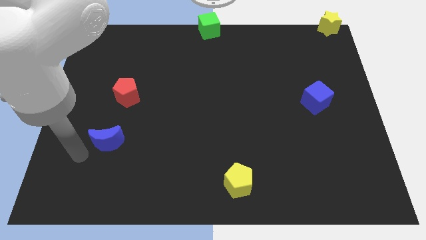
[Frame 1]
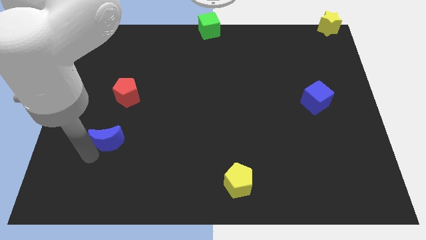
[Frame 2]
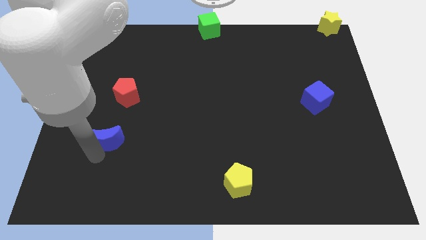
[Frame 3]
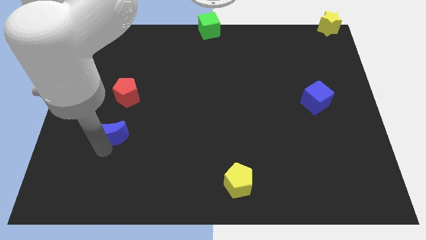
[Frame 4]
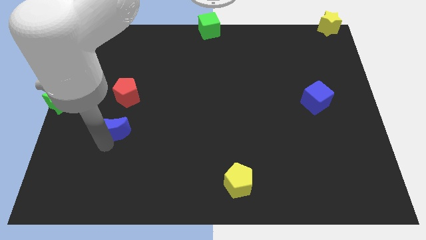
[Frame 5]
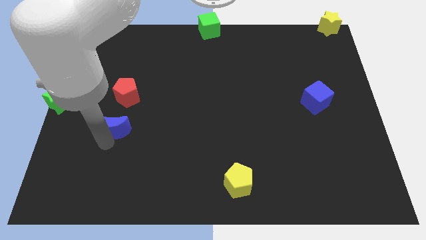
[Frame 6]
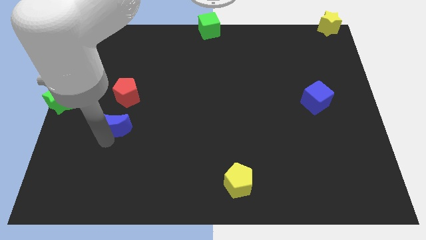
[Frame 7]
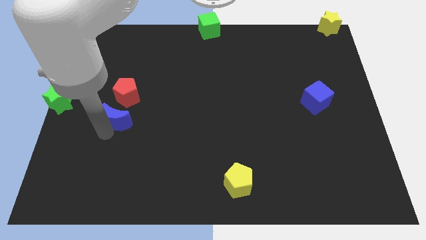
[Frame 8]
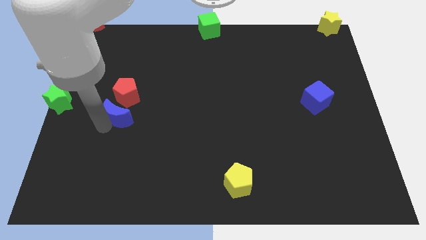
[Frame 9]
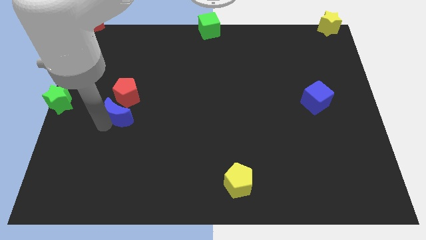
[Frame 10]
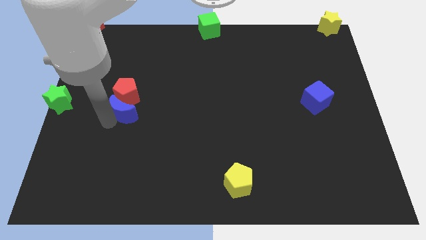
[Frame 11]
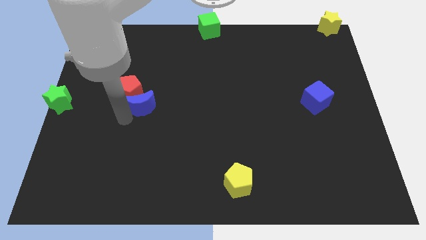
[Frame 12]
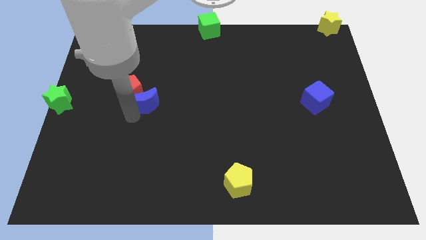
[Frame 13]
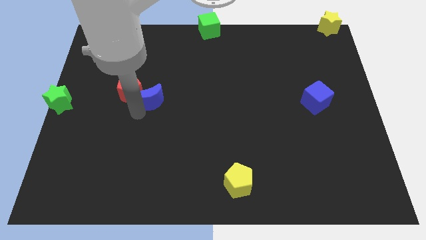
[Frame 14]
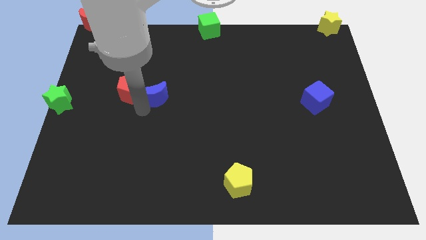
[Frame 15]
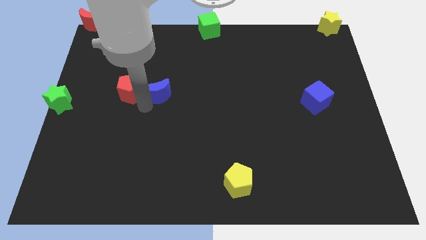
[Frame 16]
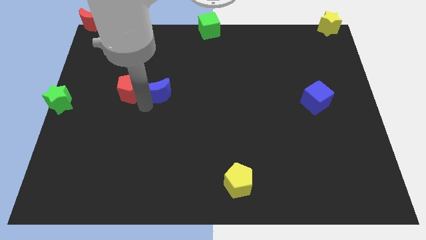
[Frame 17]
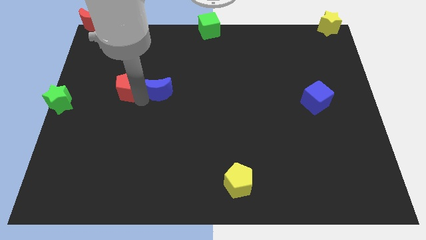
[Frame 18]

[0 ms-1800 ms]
move the blue crescent right to the red pentagon

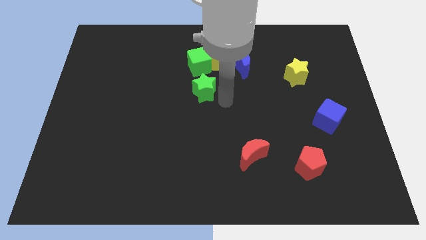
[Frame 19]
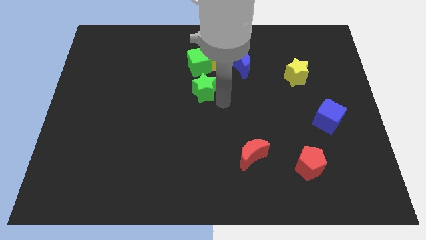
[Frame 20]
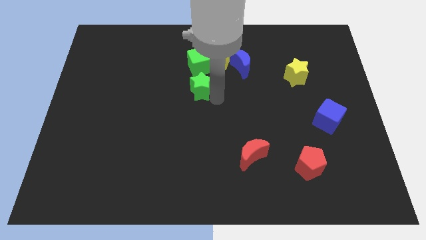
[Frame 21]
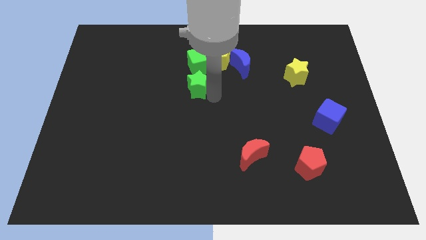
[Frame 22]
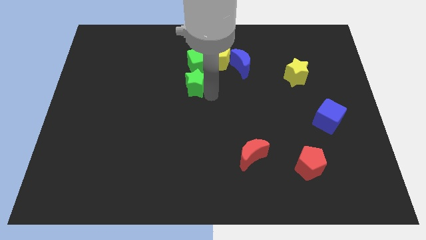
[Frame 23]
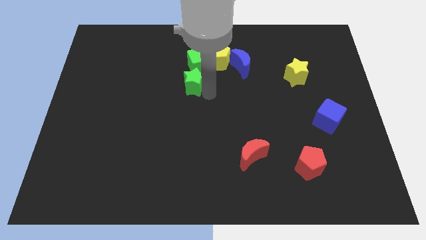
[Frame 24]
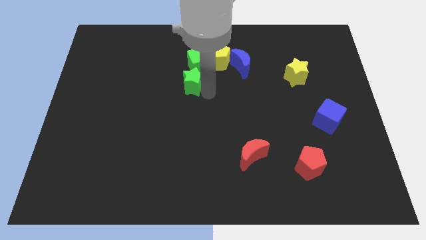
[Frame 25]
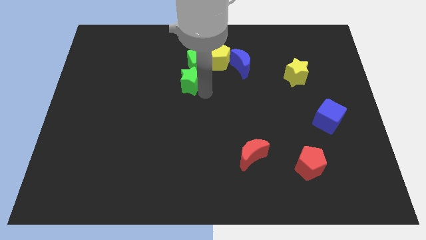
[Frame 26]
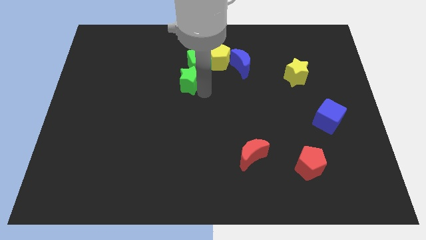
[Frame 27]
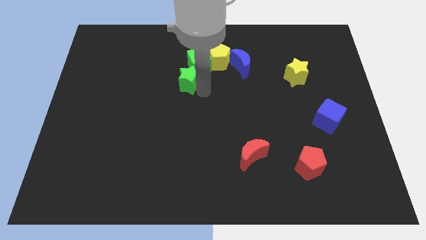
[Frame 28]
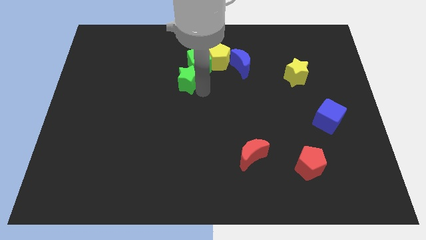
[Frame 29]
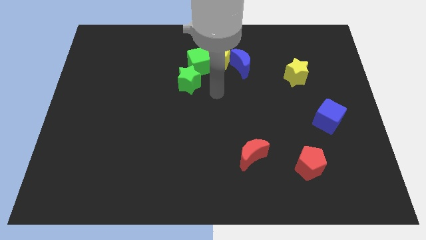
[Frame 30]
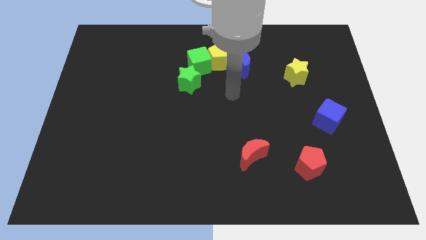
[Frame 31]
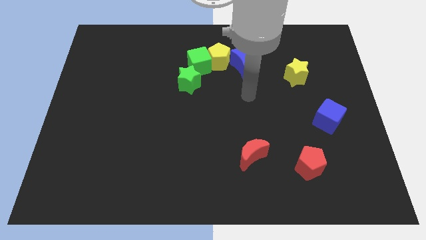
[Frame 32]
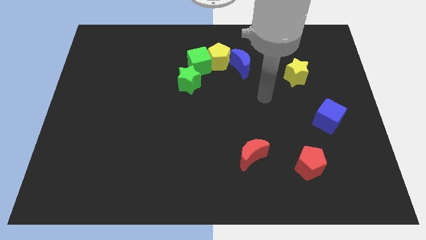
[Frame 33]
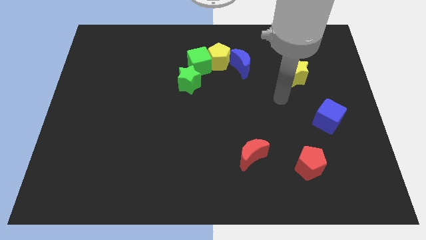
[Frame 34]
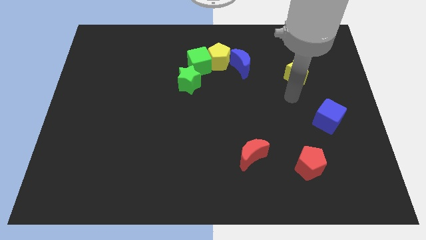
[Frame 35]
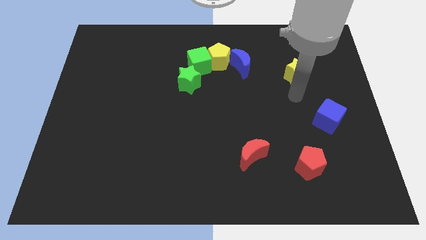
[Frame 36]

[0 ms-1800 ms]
push the green star to the bottom left of the green cube

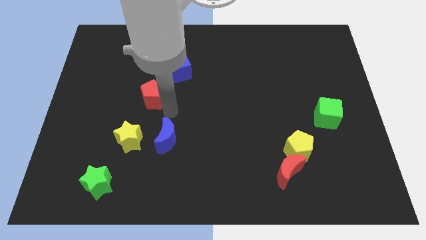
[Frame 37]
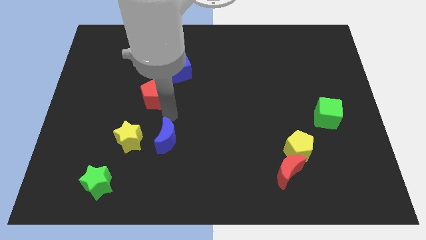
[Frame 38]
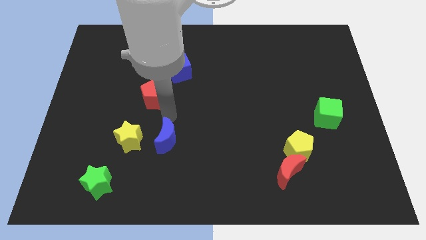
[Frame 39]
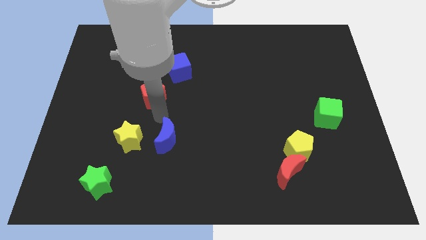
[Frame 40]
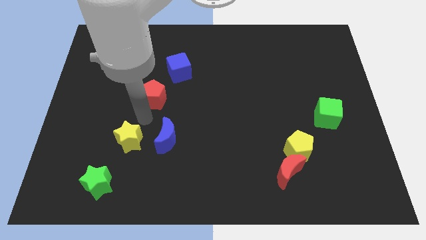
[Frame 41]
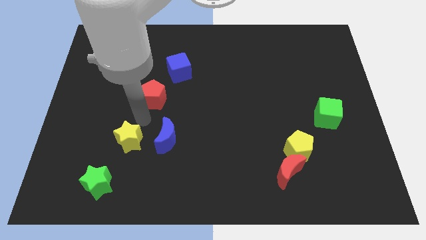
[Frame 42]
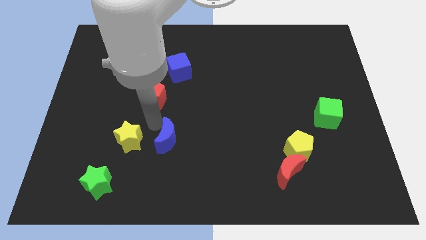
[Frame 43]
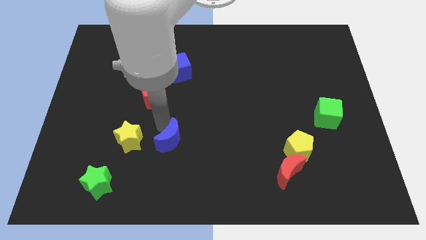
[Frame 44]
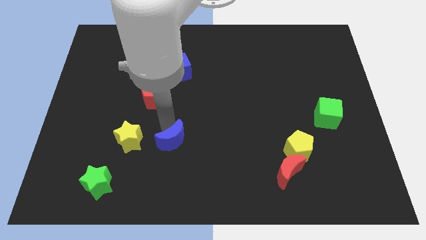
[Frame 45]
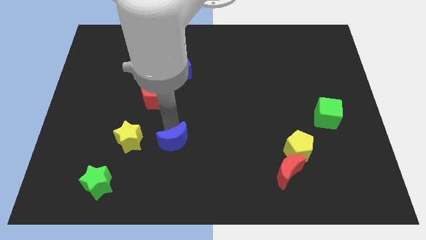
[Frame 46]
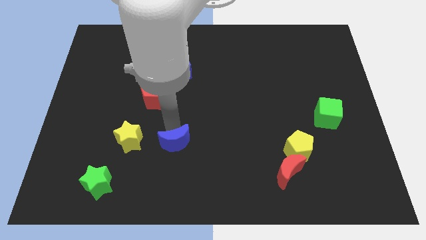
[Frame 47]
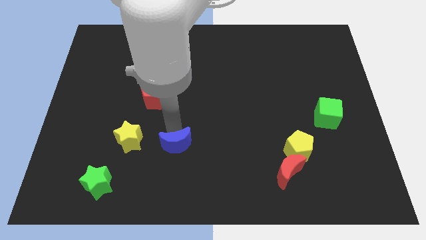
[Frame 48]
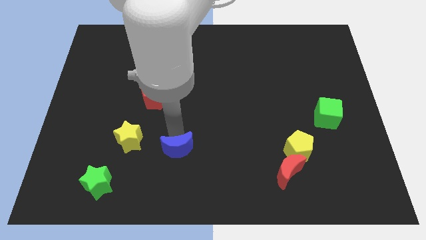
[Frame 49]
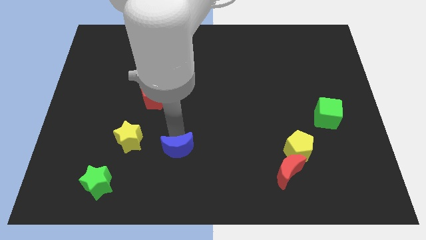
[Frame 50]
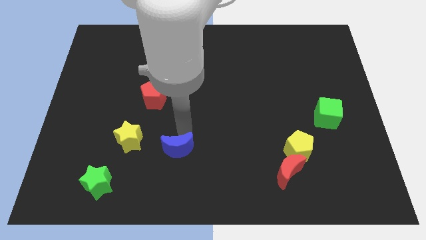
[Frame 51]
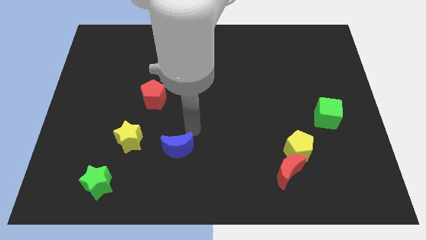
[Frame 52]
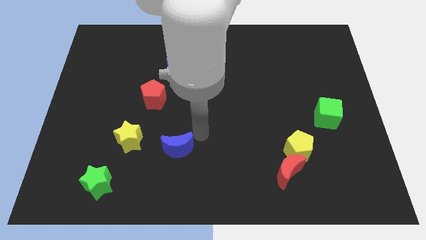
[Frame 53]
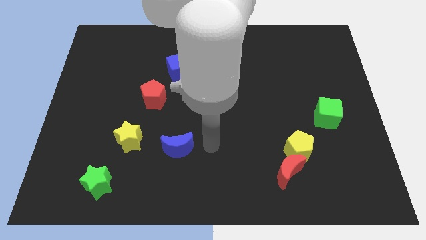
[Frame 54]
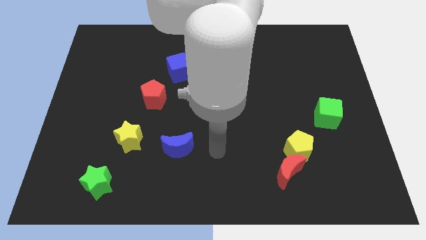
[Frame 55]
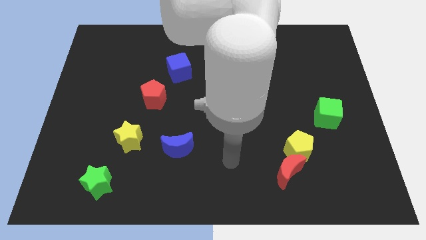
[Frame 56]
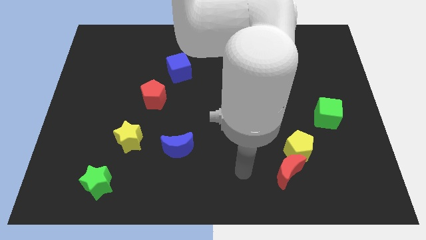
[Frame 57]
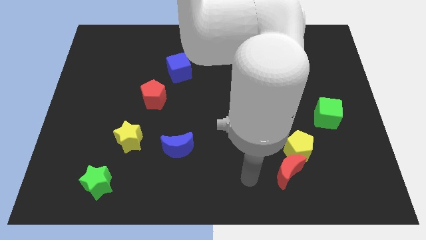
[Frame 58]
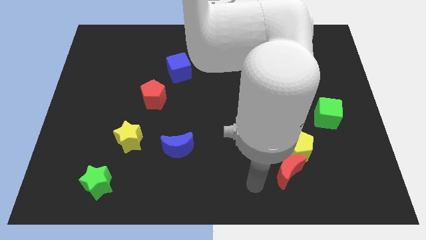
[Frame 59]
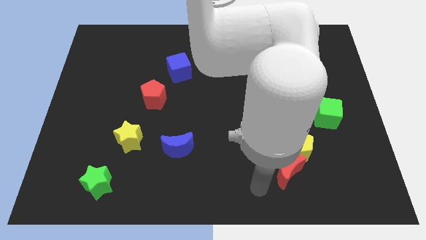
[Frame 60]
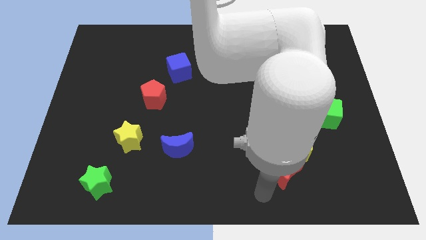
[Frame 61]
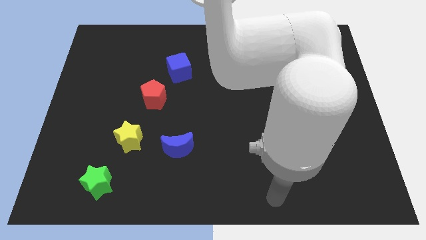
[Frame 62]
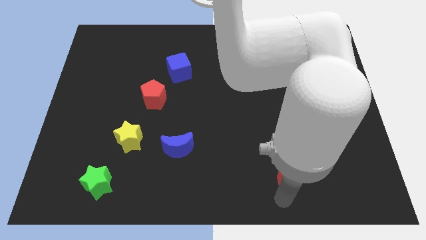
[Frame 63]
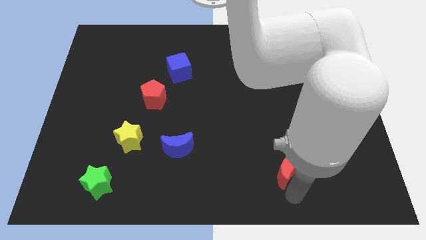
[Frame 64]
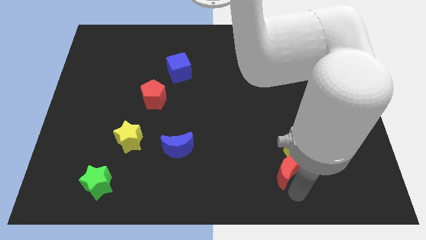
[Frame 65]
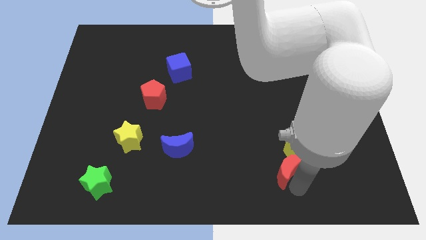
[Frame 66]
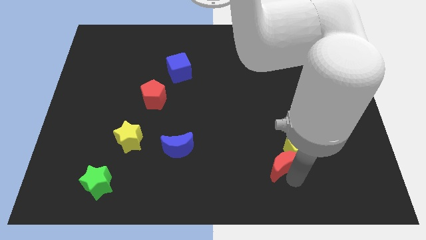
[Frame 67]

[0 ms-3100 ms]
adjust the blue moon slightly to the right of the yellow star

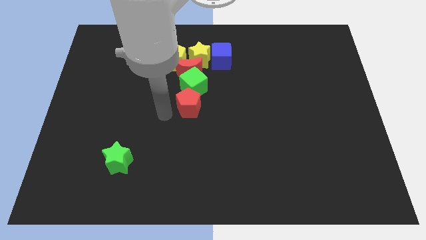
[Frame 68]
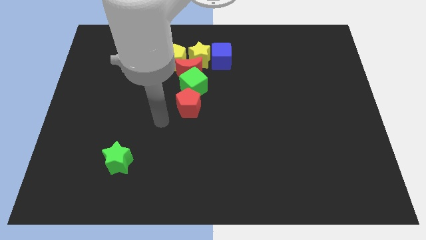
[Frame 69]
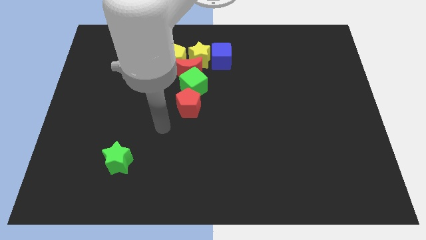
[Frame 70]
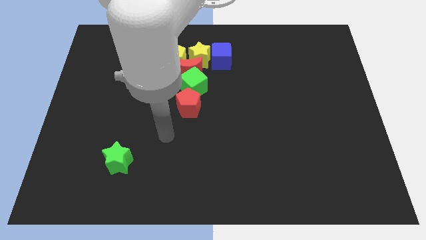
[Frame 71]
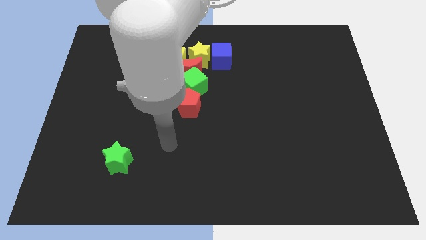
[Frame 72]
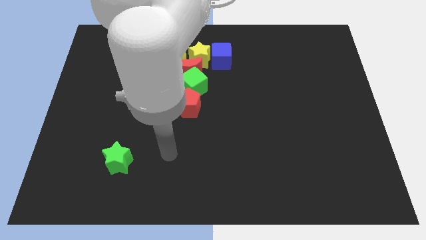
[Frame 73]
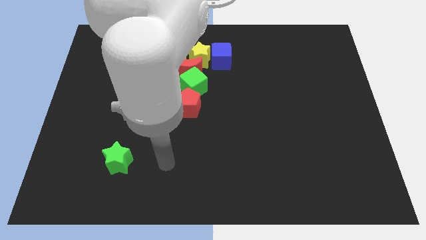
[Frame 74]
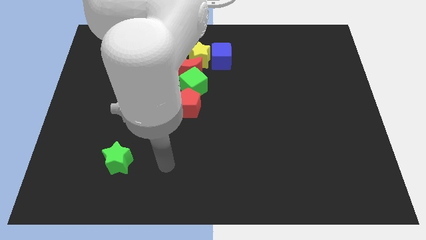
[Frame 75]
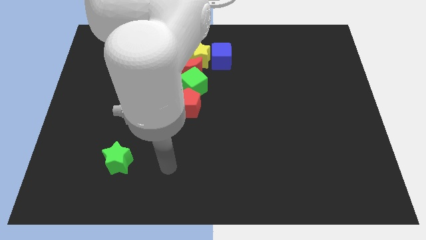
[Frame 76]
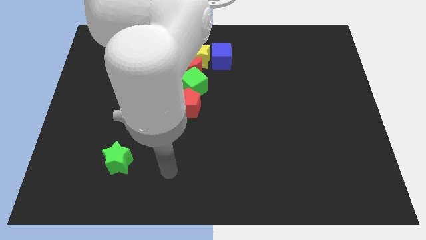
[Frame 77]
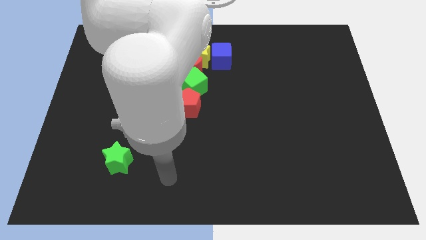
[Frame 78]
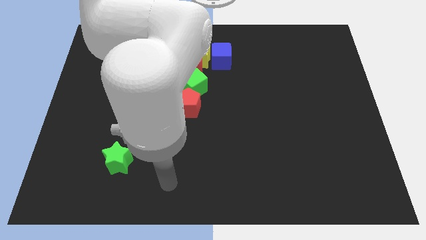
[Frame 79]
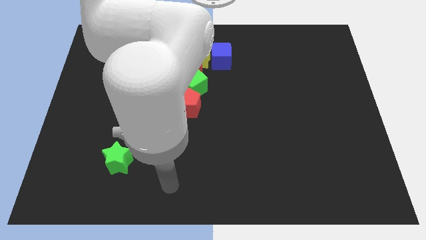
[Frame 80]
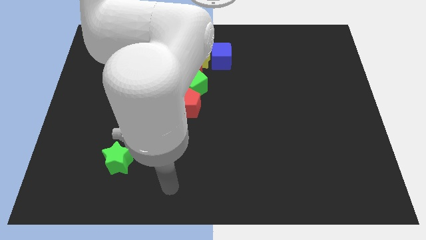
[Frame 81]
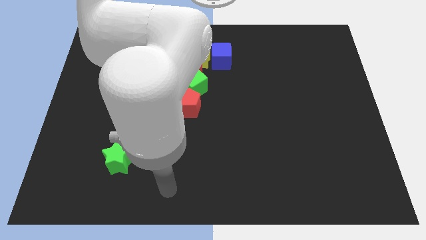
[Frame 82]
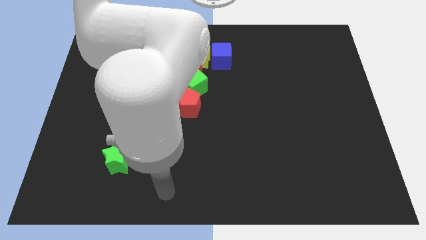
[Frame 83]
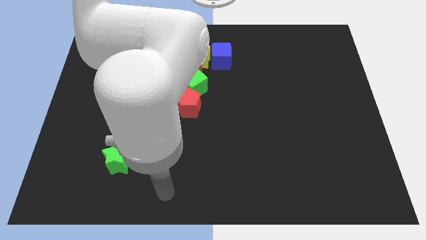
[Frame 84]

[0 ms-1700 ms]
move your arm away from the red pentagon

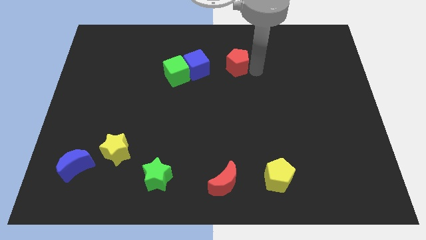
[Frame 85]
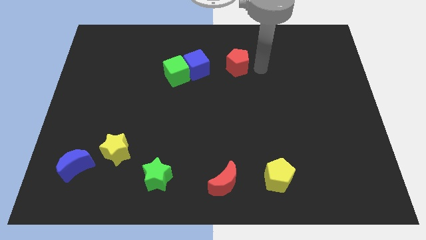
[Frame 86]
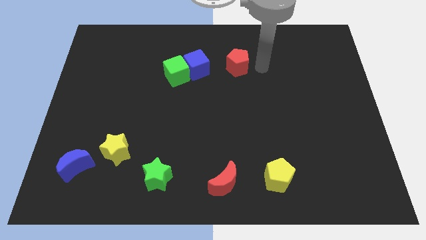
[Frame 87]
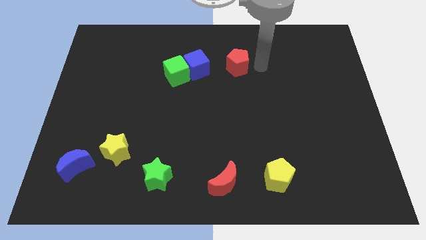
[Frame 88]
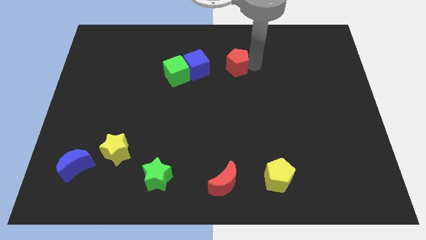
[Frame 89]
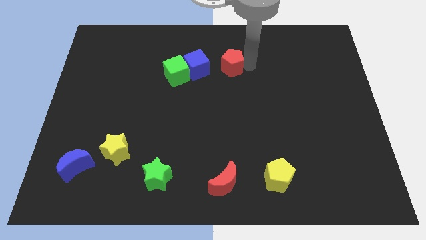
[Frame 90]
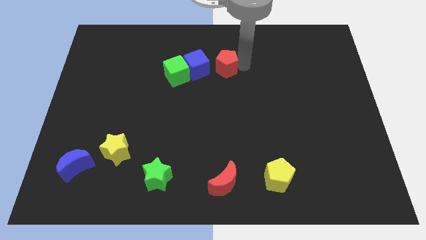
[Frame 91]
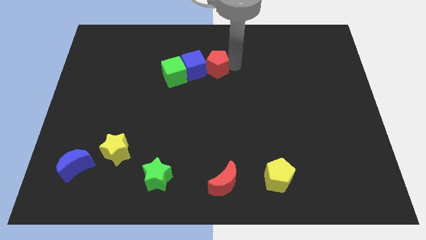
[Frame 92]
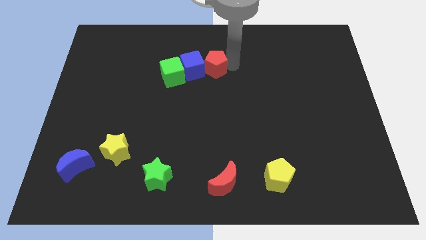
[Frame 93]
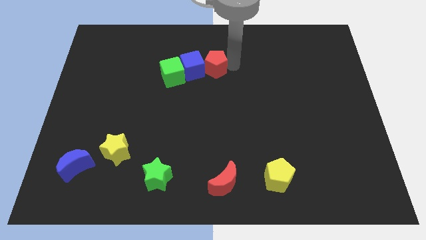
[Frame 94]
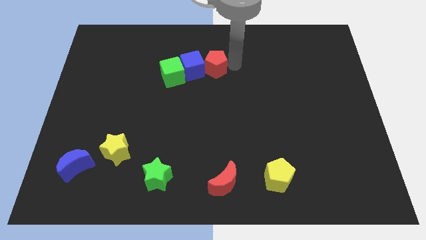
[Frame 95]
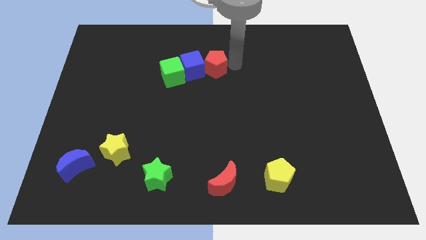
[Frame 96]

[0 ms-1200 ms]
push the red pentagon into the blue cube
